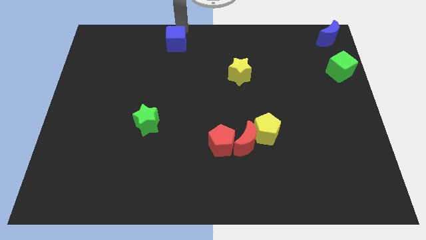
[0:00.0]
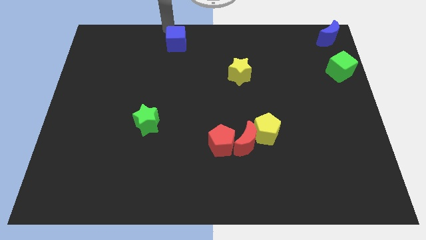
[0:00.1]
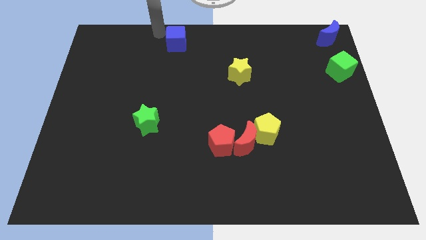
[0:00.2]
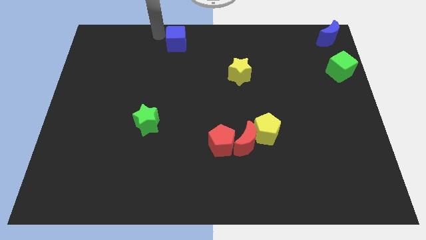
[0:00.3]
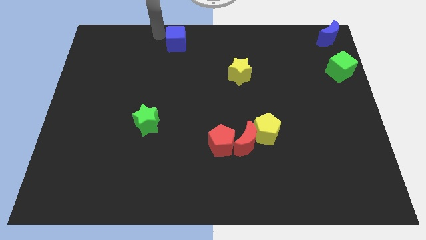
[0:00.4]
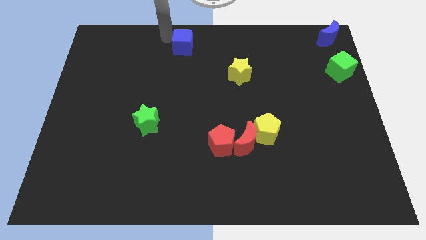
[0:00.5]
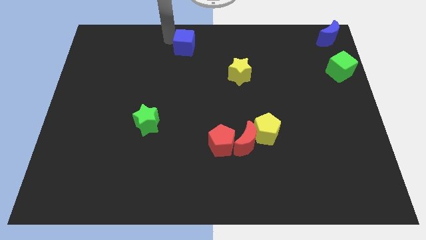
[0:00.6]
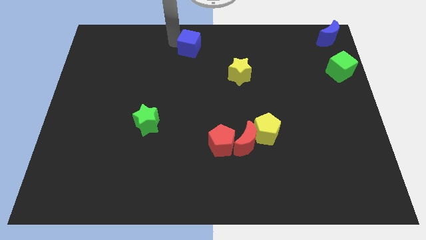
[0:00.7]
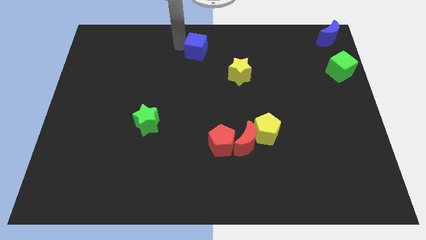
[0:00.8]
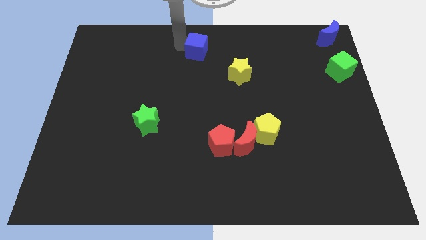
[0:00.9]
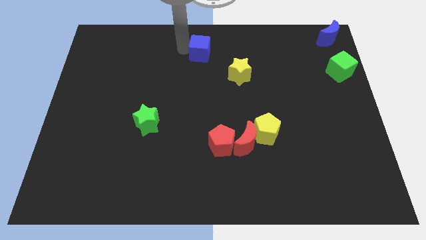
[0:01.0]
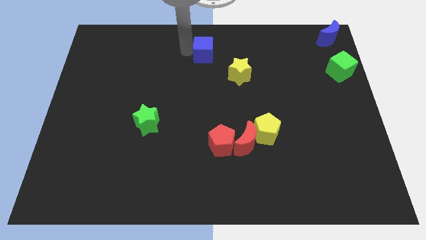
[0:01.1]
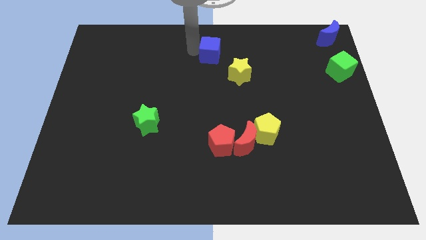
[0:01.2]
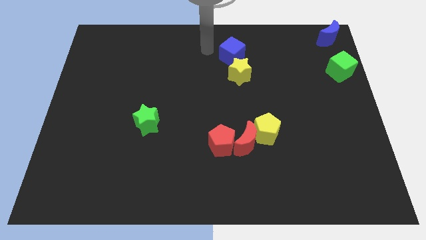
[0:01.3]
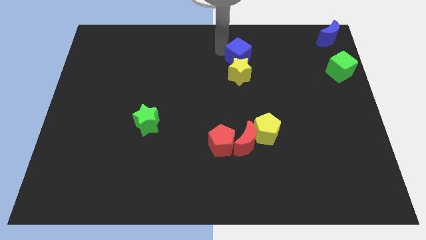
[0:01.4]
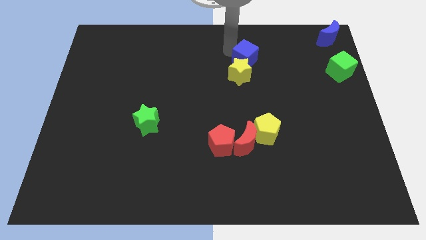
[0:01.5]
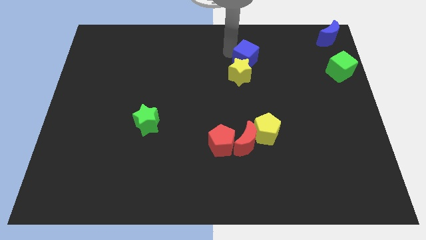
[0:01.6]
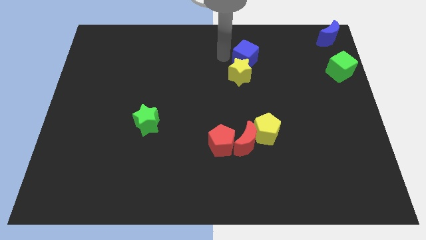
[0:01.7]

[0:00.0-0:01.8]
move the blue cube to the top side of the yellow star

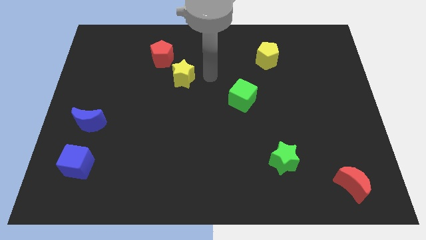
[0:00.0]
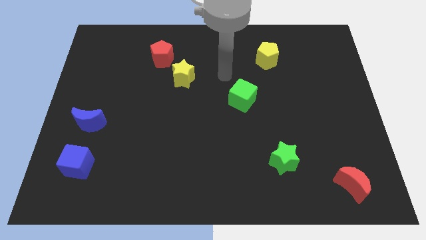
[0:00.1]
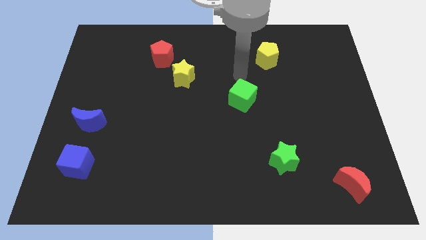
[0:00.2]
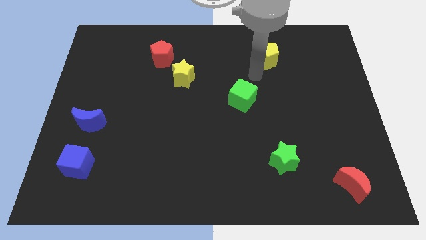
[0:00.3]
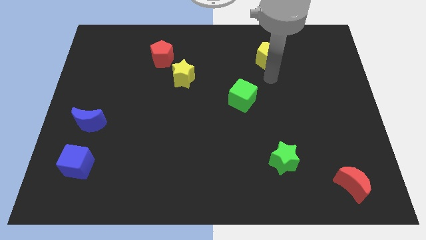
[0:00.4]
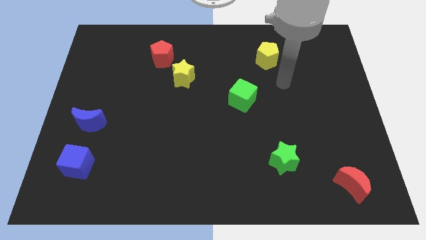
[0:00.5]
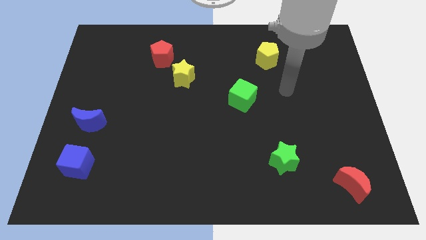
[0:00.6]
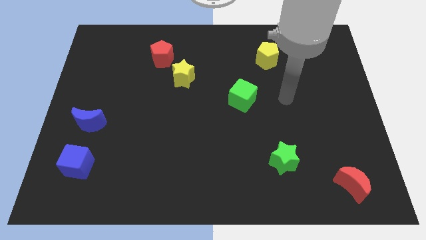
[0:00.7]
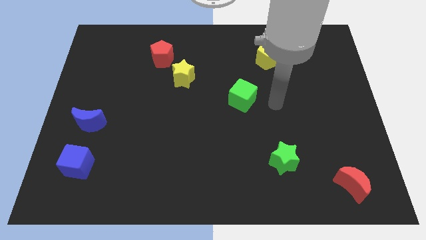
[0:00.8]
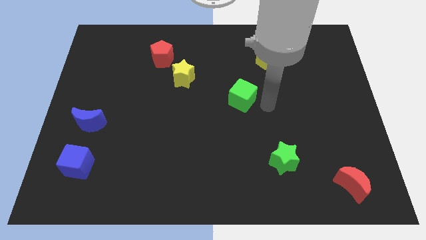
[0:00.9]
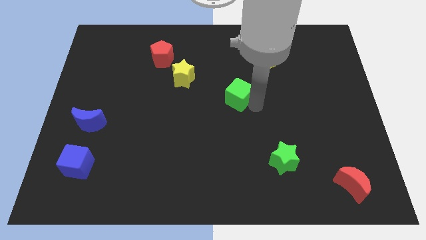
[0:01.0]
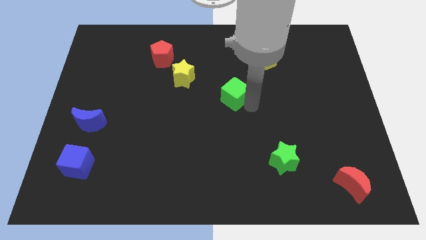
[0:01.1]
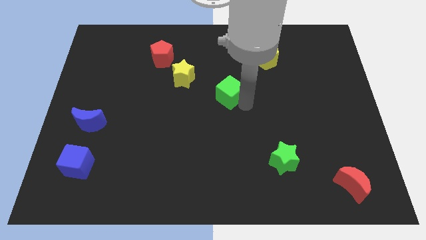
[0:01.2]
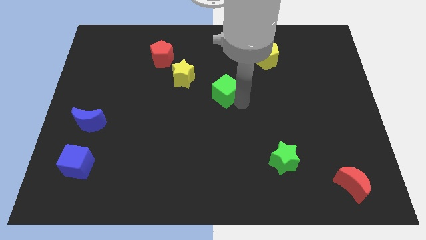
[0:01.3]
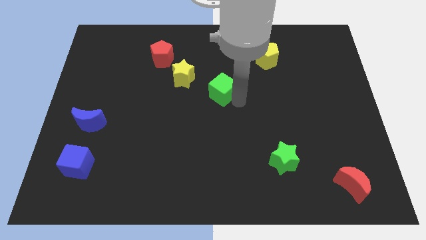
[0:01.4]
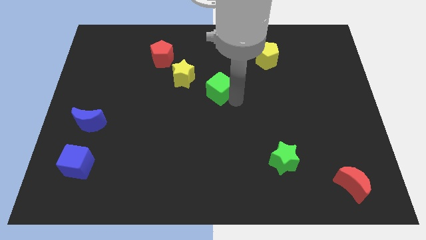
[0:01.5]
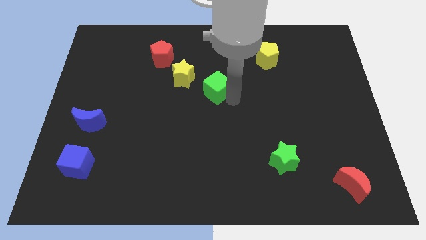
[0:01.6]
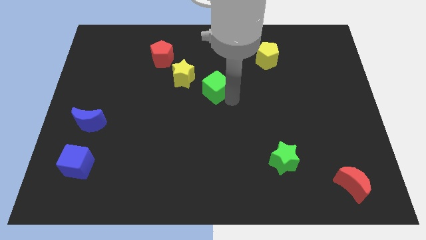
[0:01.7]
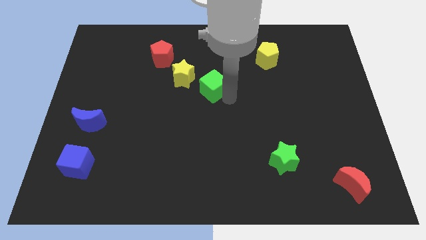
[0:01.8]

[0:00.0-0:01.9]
push the green cube to the right of the yellow star

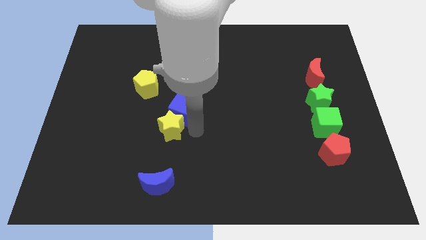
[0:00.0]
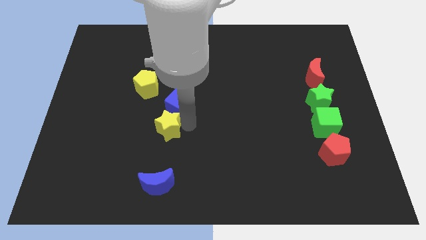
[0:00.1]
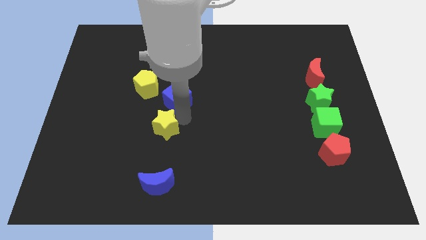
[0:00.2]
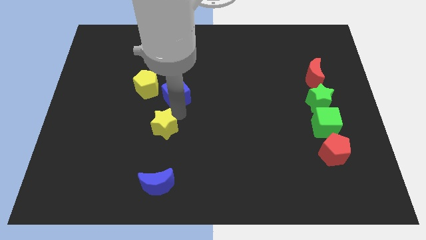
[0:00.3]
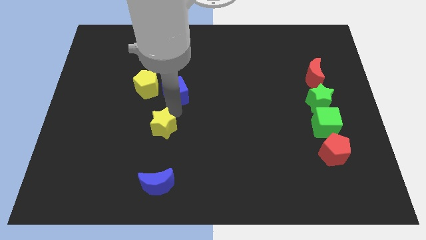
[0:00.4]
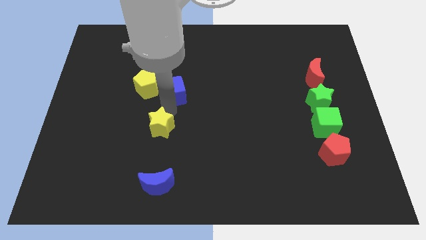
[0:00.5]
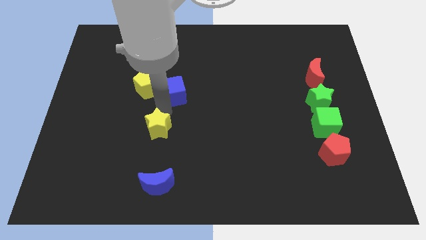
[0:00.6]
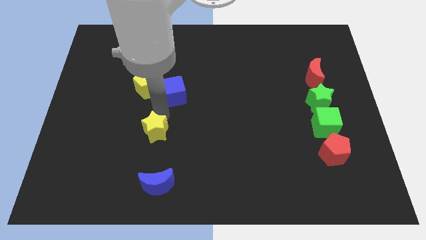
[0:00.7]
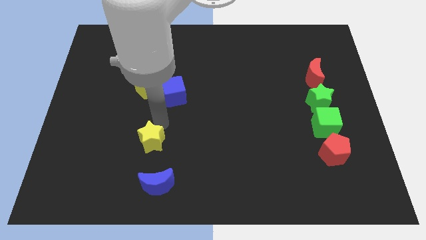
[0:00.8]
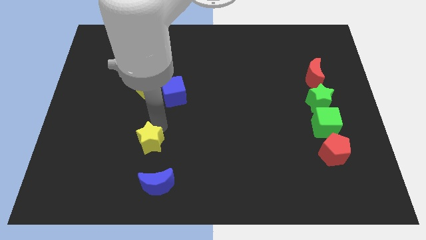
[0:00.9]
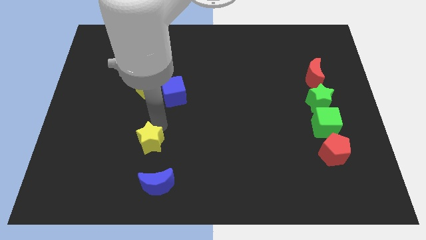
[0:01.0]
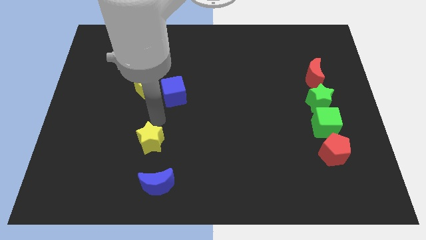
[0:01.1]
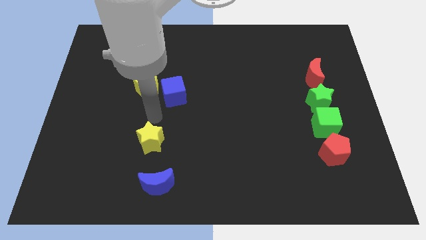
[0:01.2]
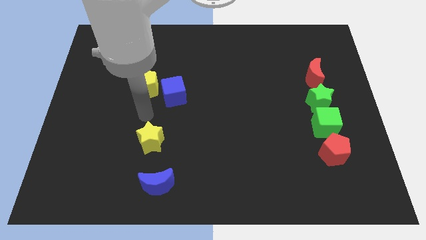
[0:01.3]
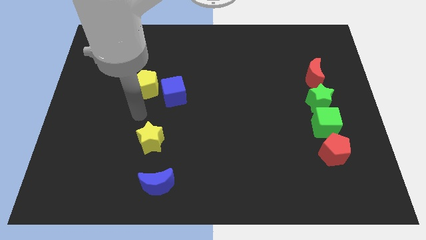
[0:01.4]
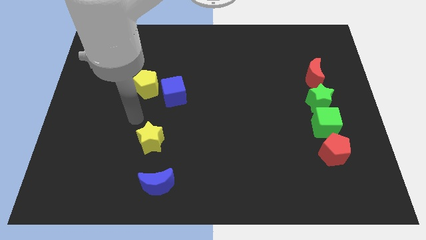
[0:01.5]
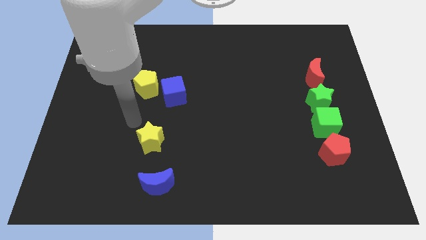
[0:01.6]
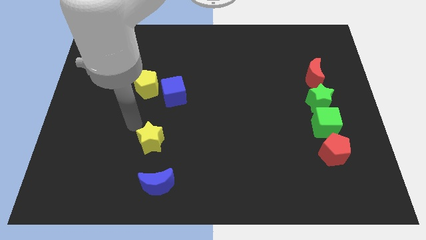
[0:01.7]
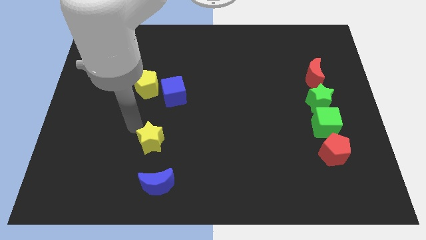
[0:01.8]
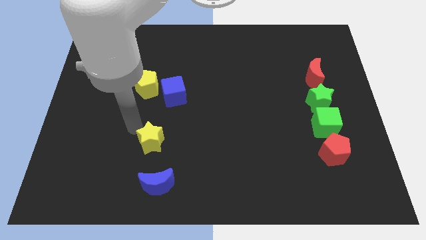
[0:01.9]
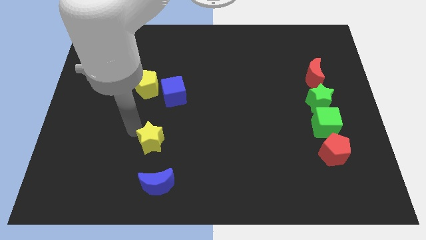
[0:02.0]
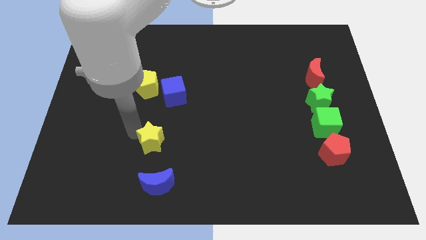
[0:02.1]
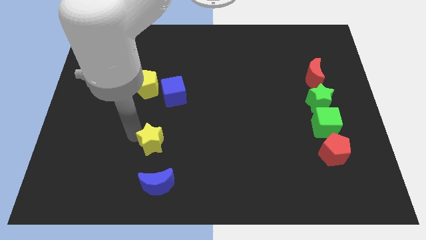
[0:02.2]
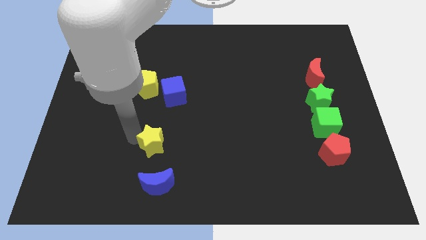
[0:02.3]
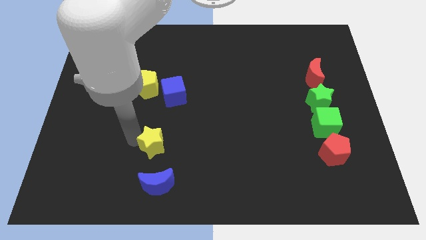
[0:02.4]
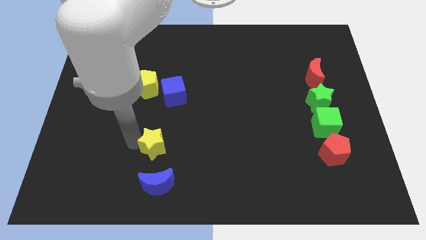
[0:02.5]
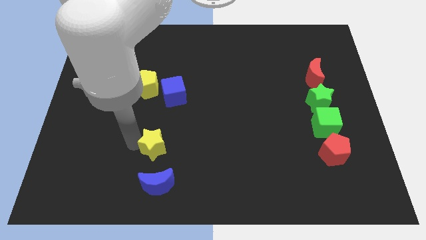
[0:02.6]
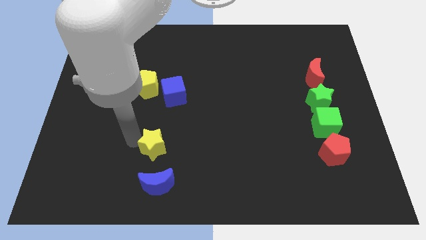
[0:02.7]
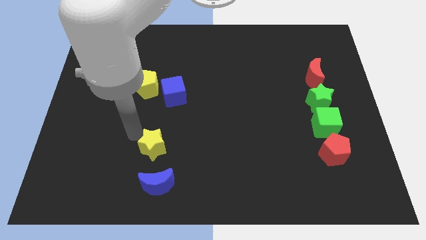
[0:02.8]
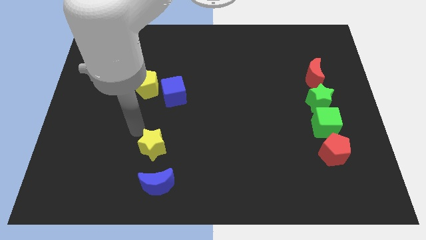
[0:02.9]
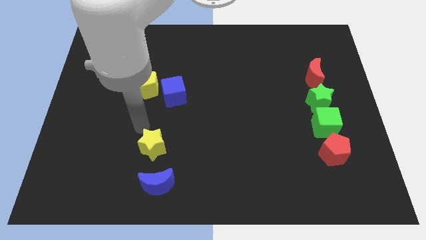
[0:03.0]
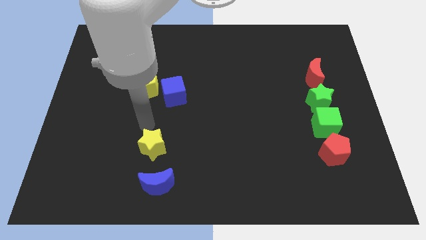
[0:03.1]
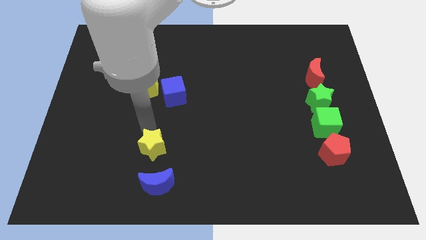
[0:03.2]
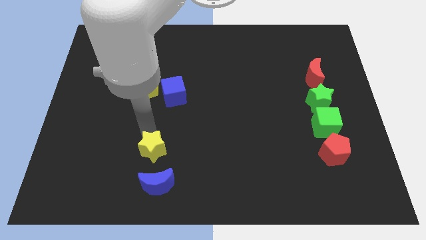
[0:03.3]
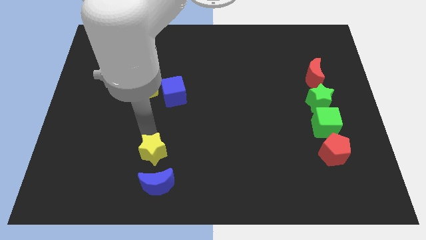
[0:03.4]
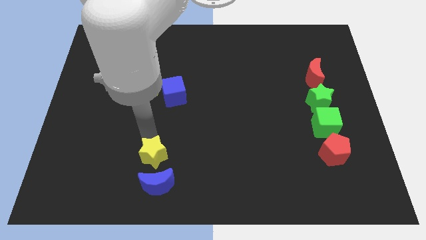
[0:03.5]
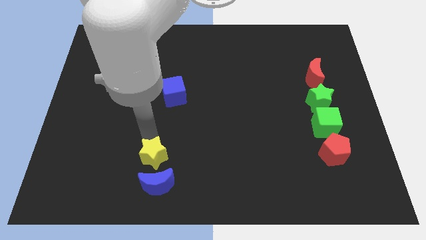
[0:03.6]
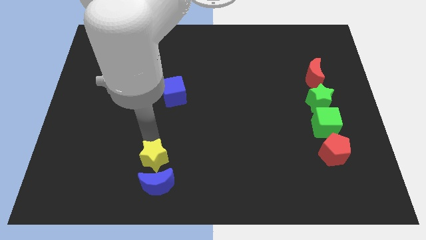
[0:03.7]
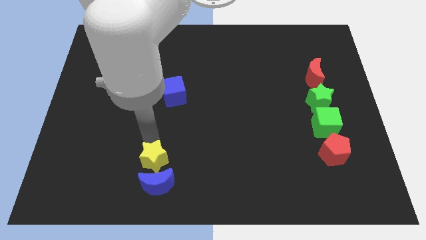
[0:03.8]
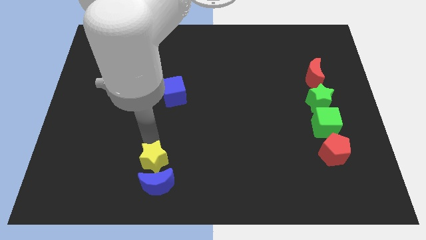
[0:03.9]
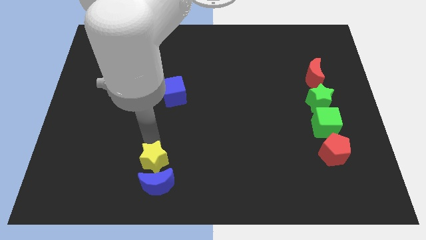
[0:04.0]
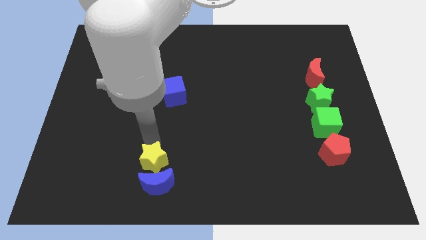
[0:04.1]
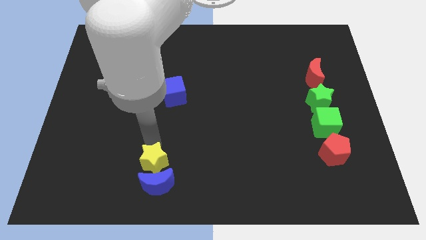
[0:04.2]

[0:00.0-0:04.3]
place the yellow star at the top of blue crescent

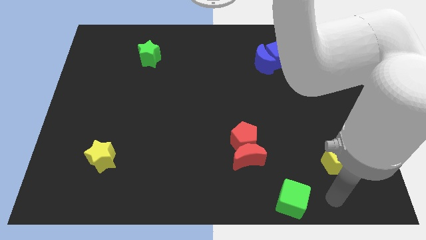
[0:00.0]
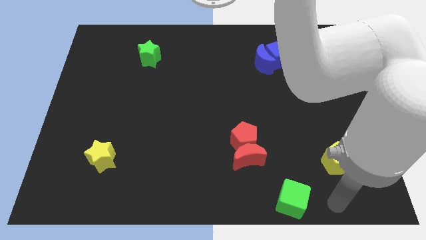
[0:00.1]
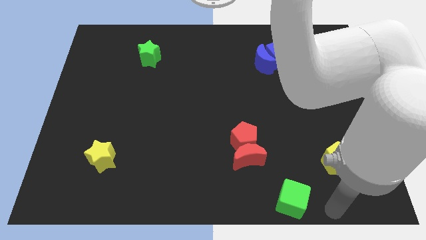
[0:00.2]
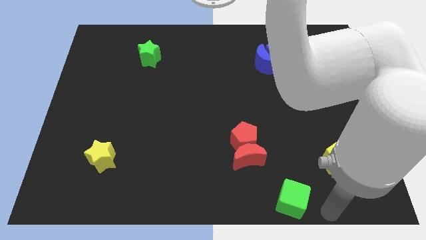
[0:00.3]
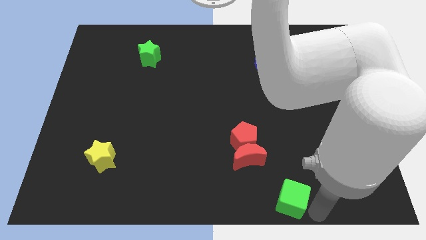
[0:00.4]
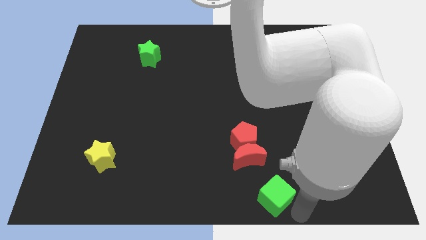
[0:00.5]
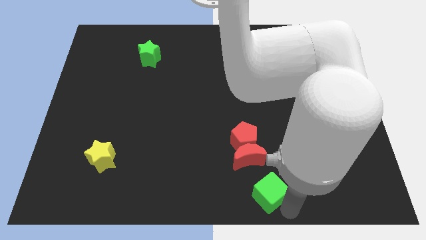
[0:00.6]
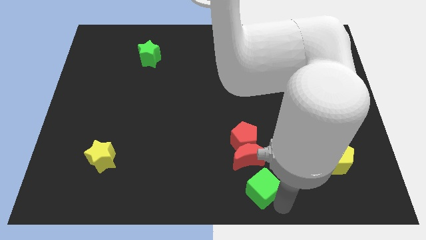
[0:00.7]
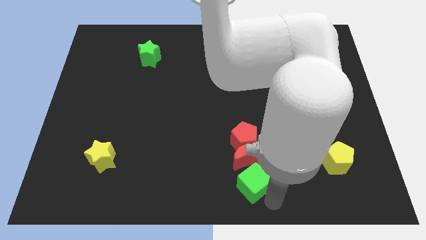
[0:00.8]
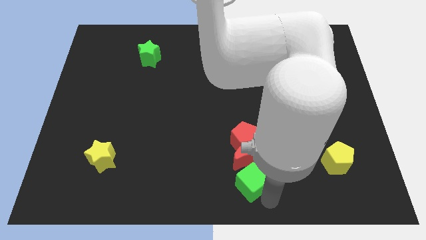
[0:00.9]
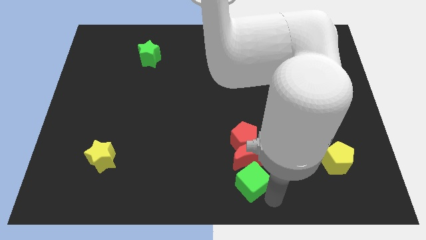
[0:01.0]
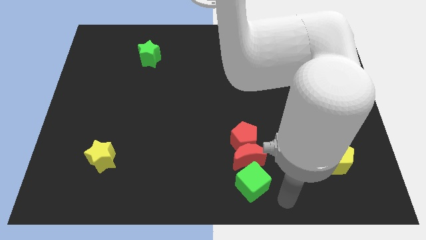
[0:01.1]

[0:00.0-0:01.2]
place the green cube below the red crescent to form a vertical line
